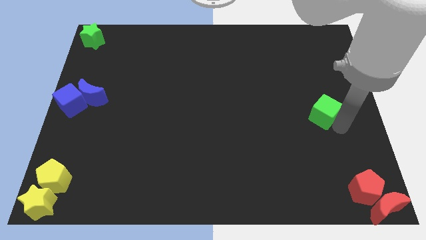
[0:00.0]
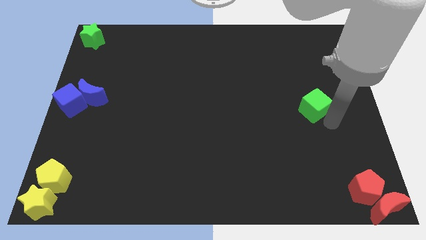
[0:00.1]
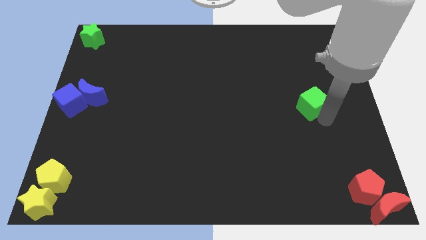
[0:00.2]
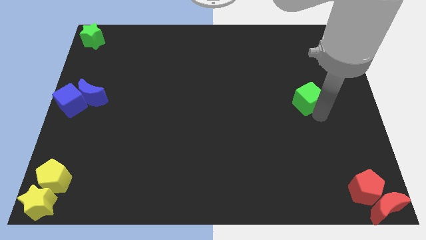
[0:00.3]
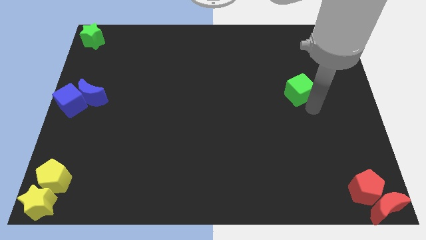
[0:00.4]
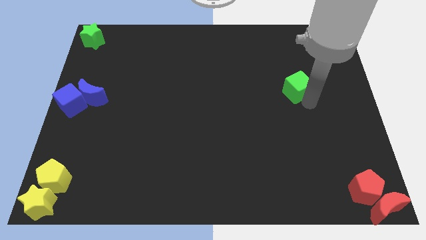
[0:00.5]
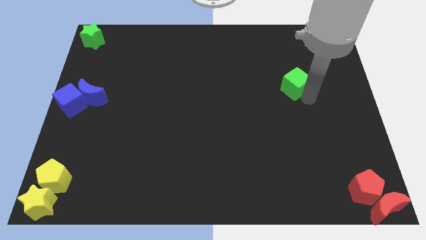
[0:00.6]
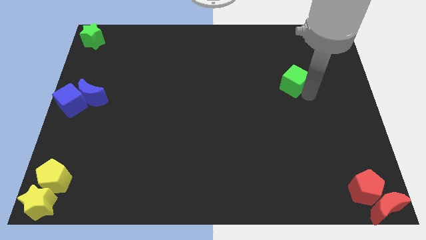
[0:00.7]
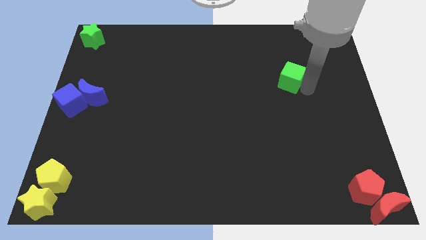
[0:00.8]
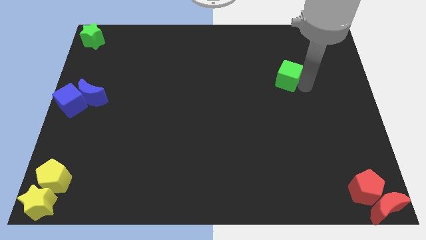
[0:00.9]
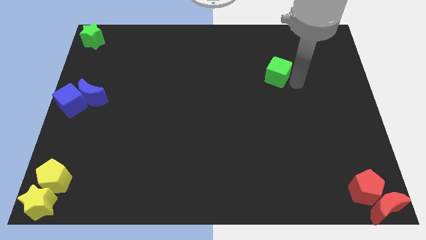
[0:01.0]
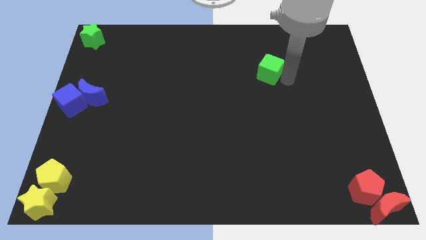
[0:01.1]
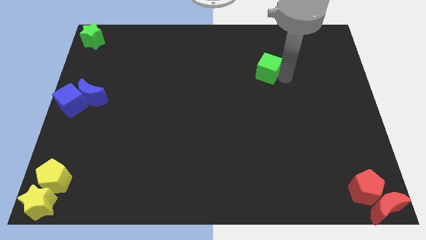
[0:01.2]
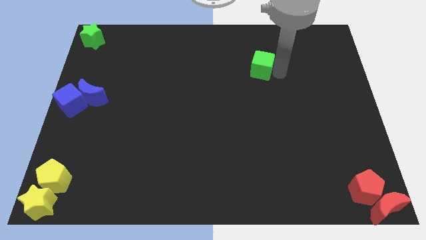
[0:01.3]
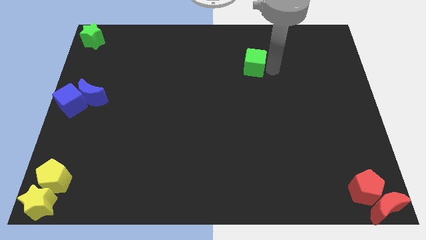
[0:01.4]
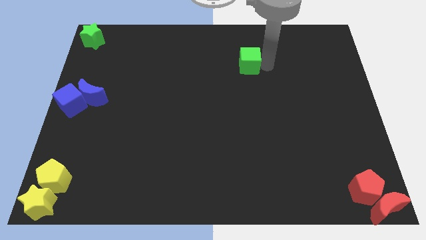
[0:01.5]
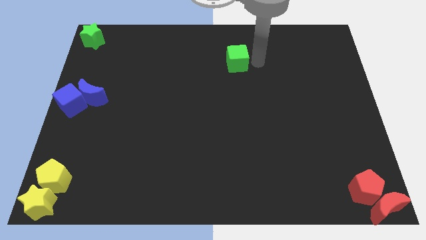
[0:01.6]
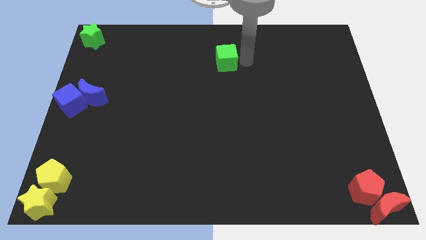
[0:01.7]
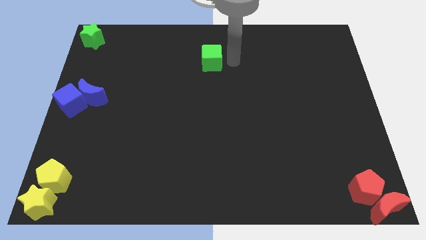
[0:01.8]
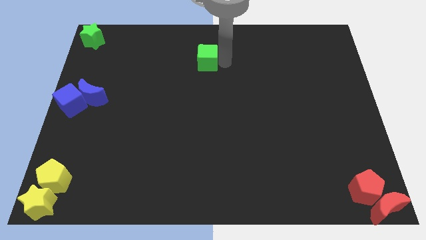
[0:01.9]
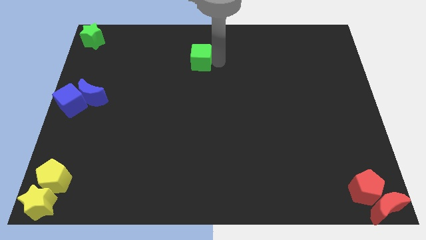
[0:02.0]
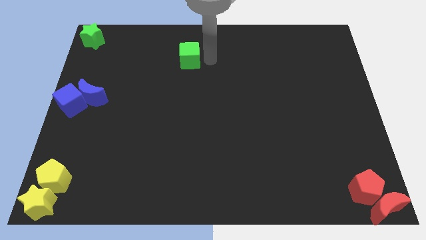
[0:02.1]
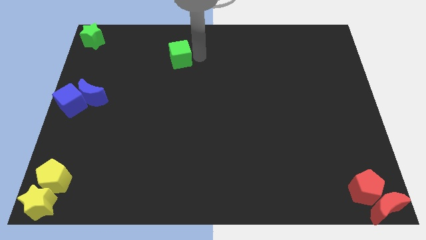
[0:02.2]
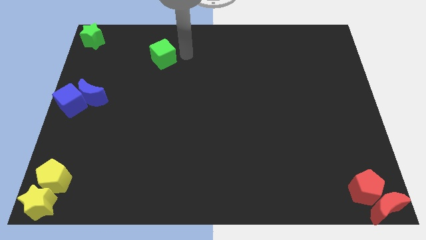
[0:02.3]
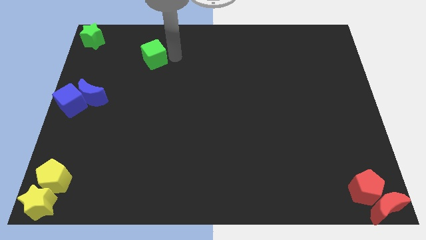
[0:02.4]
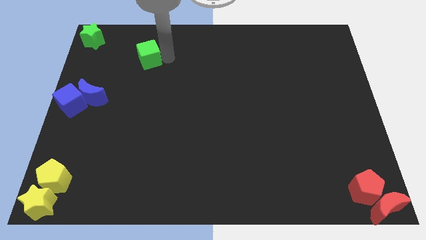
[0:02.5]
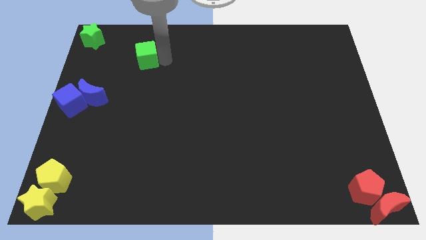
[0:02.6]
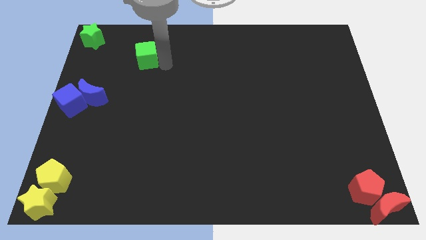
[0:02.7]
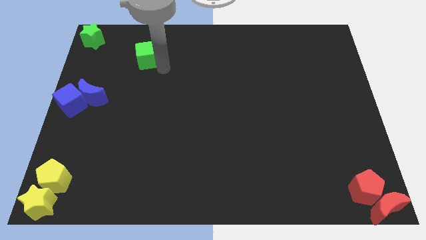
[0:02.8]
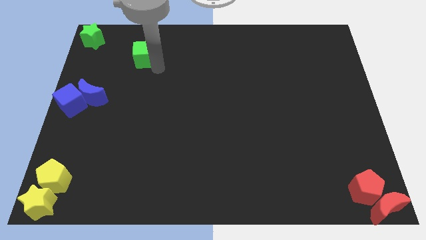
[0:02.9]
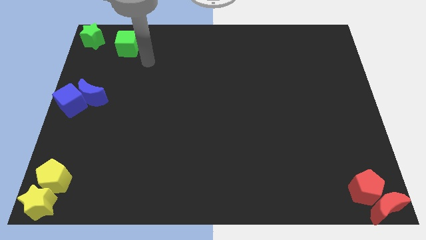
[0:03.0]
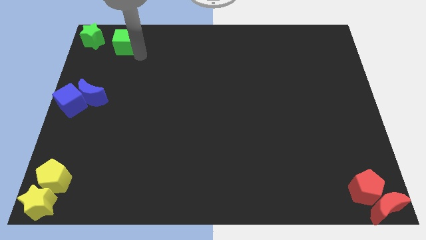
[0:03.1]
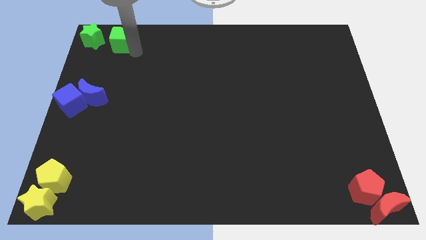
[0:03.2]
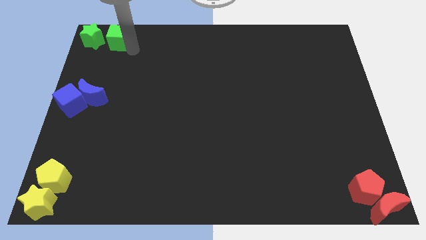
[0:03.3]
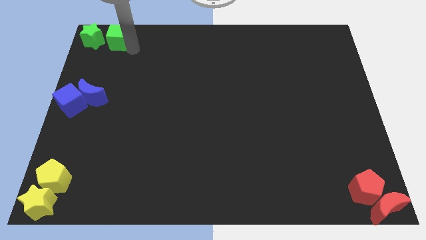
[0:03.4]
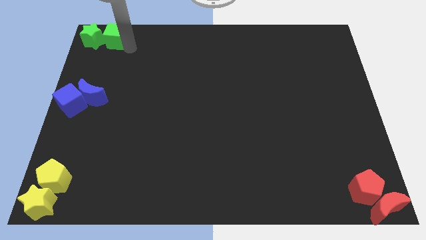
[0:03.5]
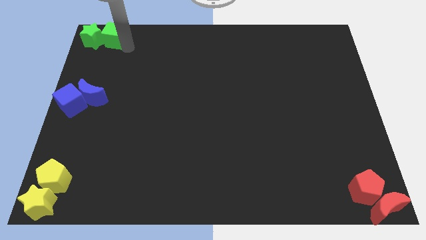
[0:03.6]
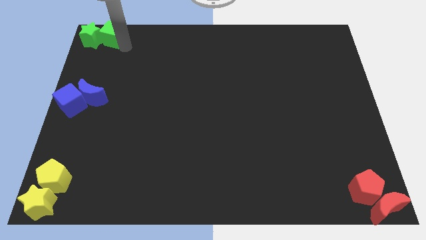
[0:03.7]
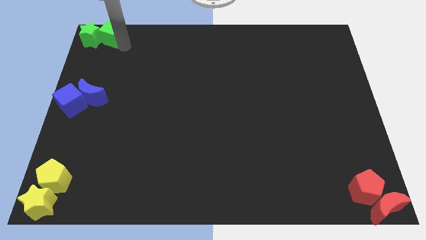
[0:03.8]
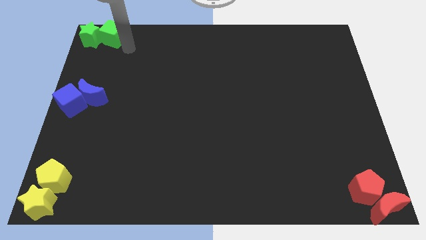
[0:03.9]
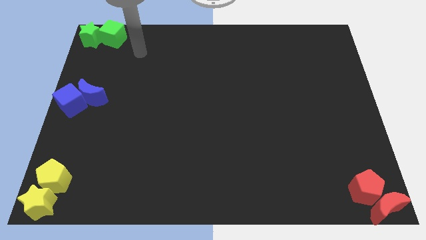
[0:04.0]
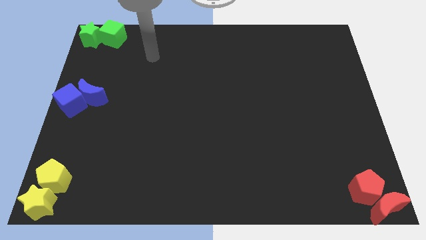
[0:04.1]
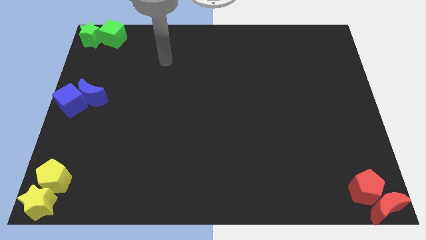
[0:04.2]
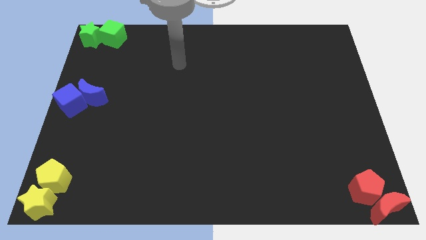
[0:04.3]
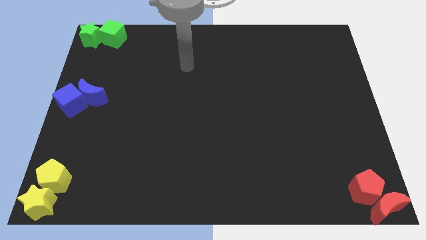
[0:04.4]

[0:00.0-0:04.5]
push the green cube into the green star

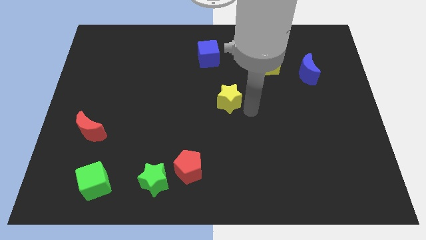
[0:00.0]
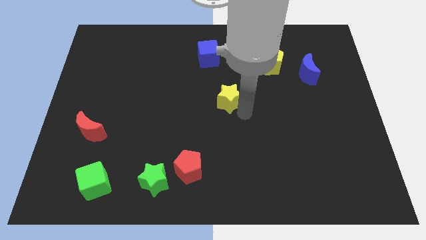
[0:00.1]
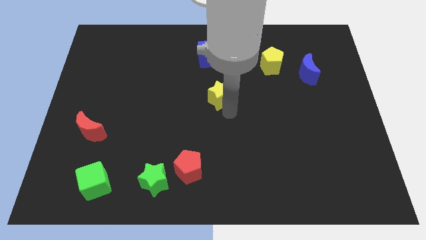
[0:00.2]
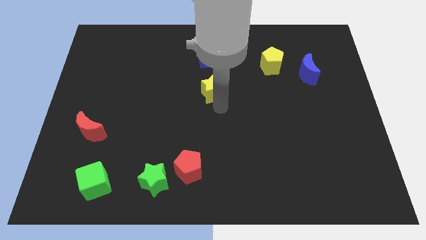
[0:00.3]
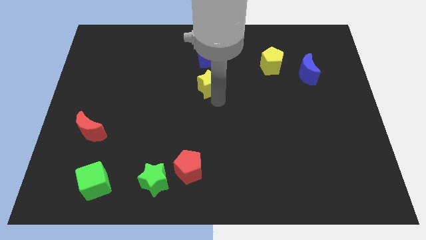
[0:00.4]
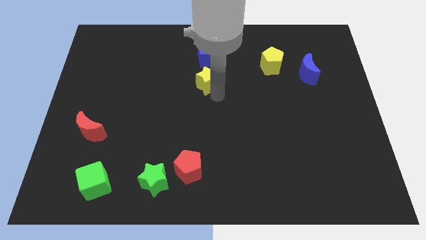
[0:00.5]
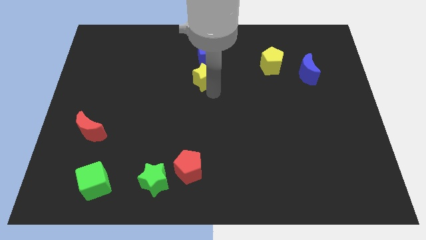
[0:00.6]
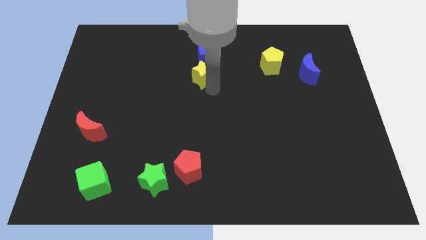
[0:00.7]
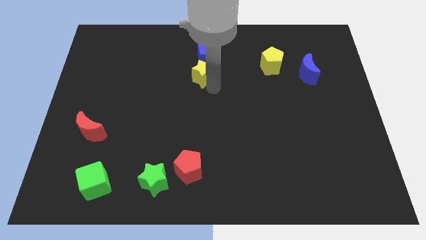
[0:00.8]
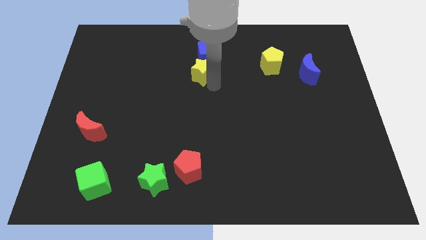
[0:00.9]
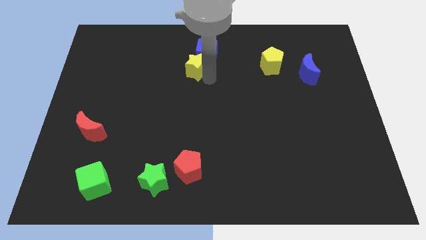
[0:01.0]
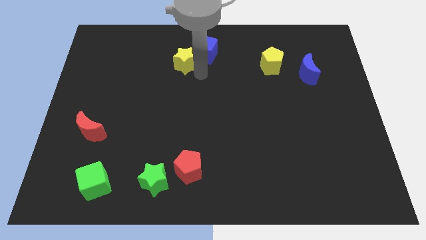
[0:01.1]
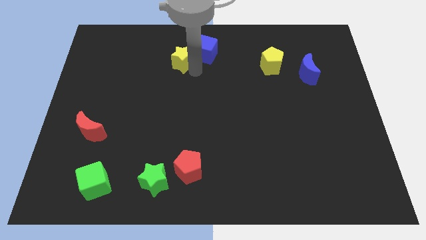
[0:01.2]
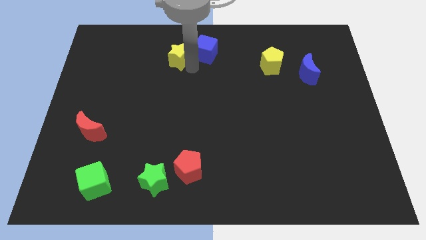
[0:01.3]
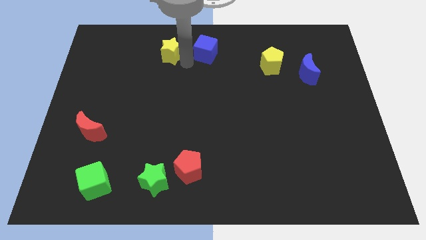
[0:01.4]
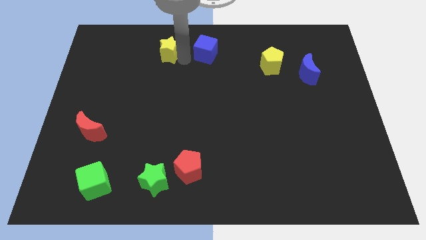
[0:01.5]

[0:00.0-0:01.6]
move the yellow star left to the blue cube

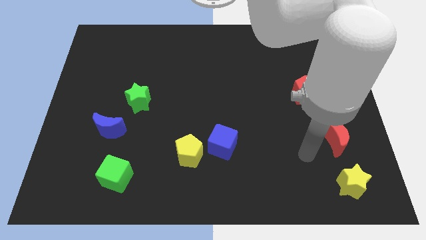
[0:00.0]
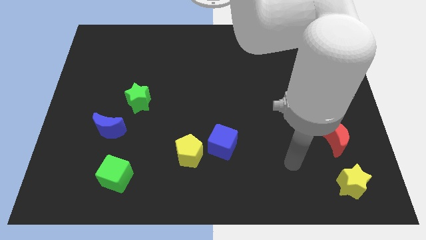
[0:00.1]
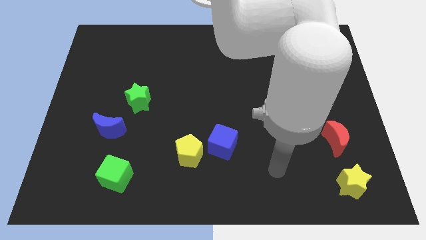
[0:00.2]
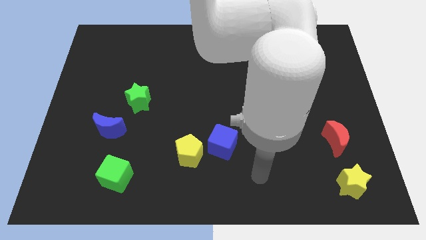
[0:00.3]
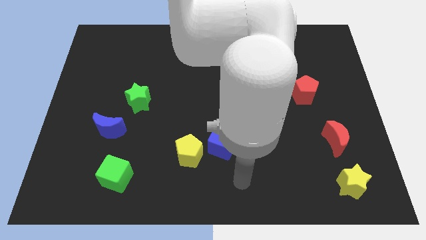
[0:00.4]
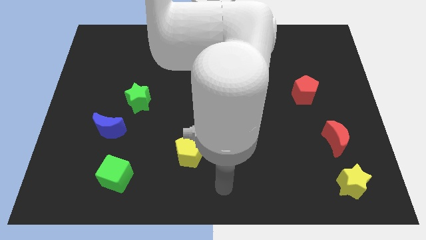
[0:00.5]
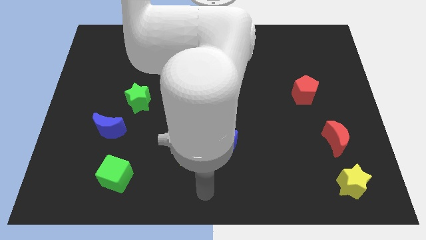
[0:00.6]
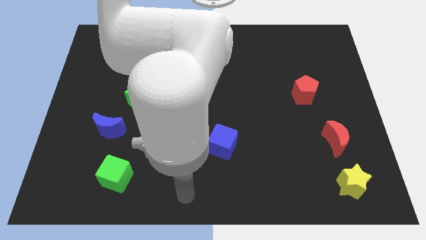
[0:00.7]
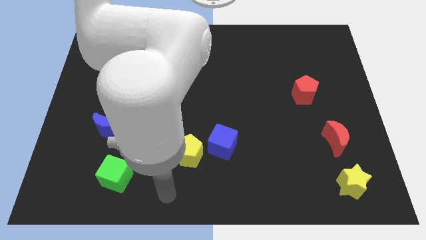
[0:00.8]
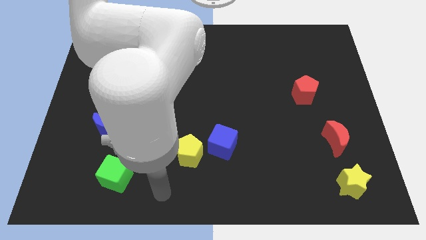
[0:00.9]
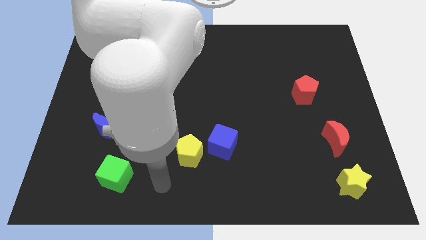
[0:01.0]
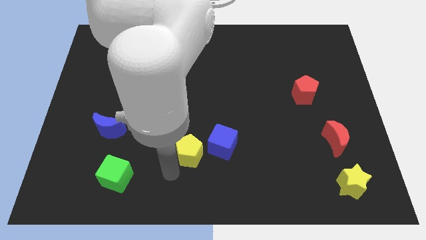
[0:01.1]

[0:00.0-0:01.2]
move the arm to the bottom of the yellow pentagon

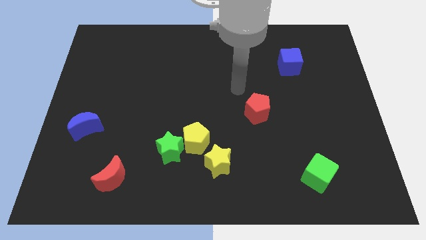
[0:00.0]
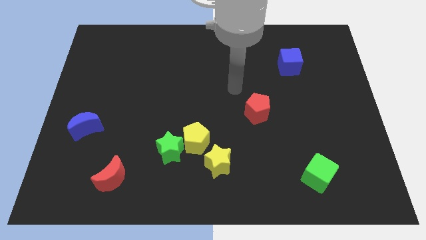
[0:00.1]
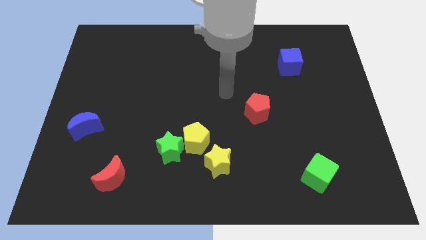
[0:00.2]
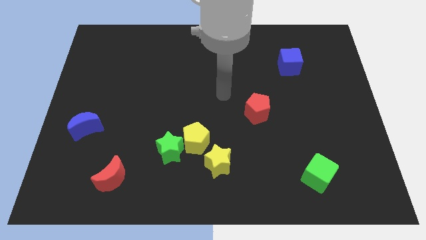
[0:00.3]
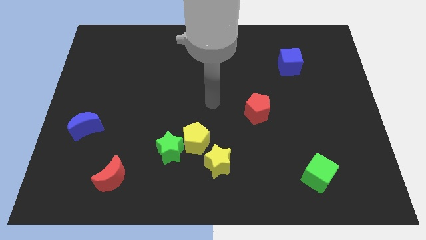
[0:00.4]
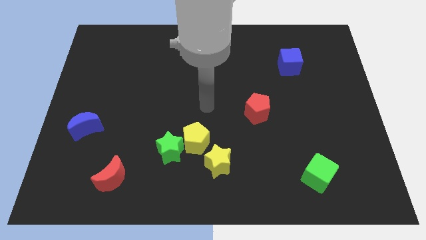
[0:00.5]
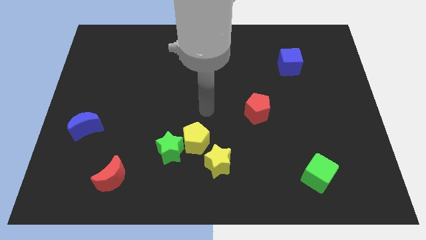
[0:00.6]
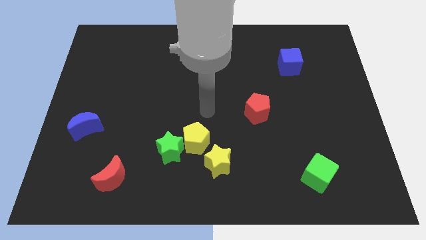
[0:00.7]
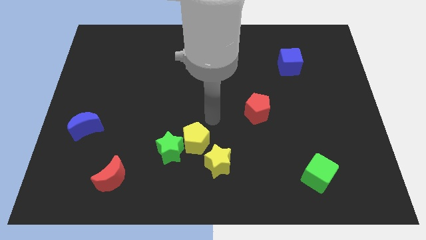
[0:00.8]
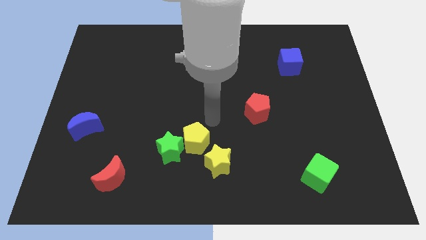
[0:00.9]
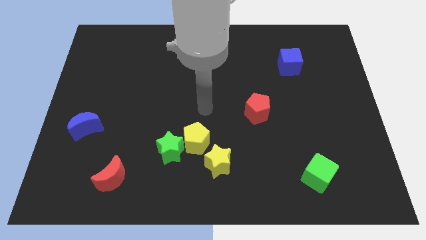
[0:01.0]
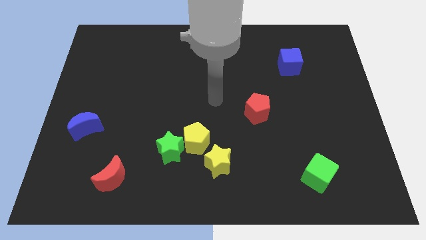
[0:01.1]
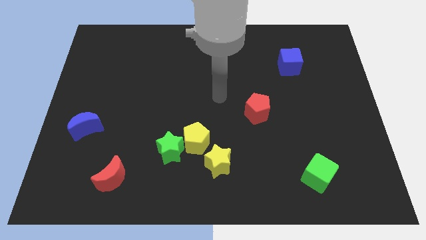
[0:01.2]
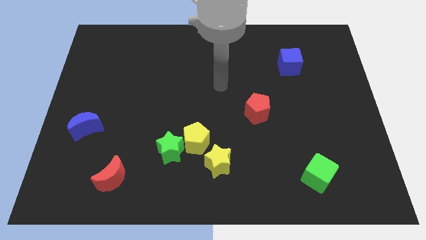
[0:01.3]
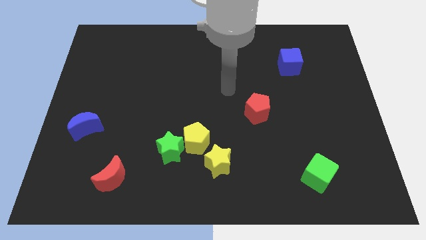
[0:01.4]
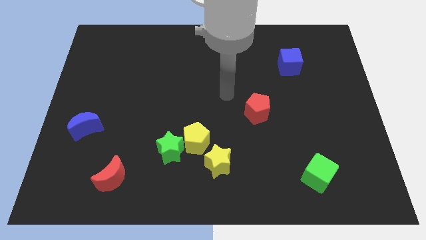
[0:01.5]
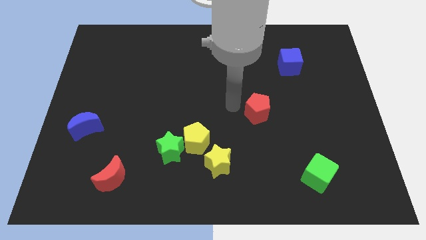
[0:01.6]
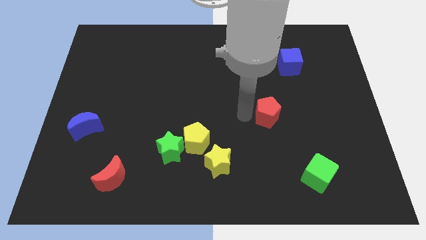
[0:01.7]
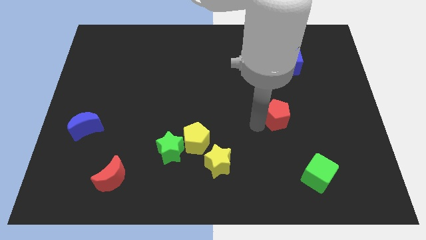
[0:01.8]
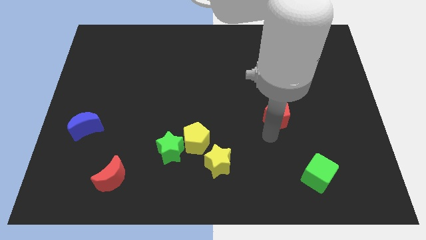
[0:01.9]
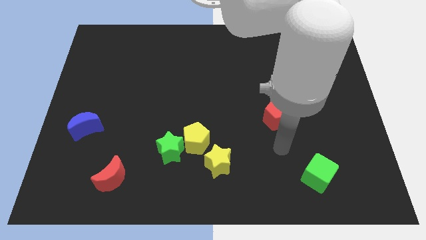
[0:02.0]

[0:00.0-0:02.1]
move the arm towards the red pentagon
